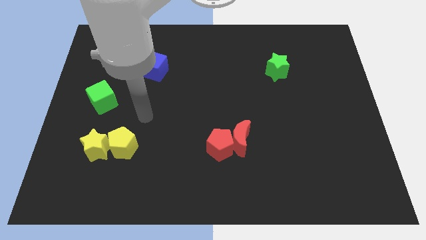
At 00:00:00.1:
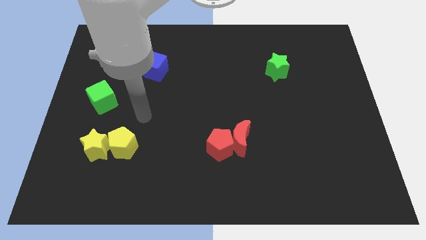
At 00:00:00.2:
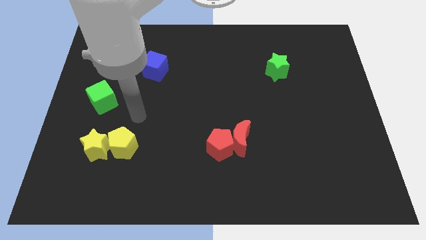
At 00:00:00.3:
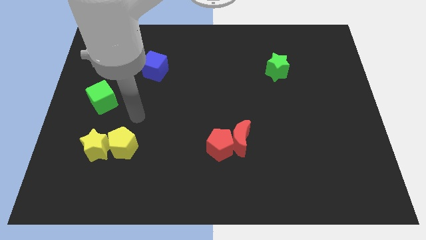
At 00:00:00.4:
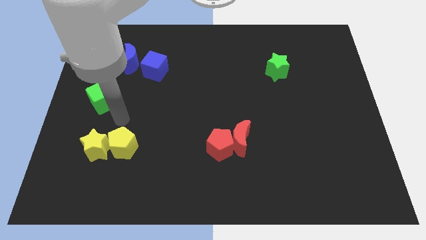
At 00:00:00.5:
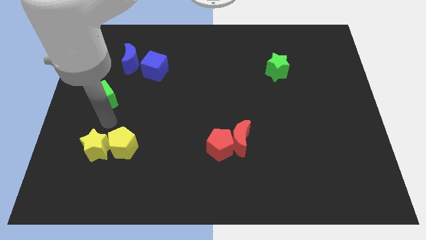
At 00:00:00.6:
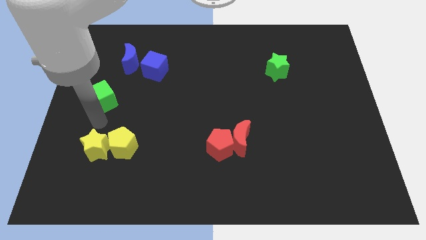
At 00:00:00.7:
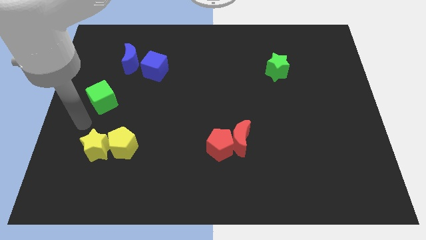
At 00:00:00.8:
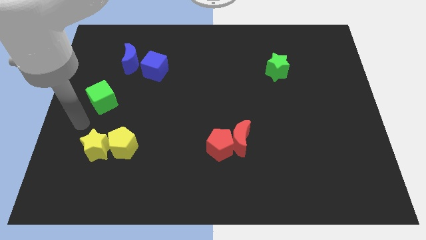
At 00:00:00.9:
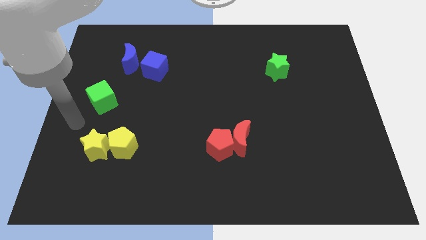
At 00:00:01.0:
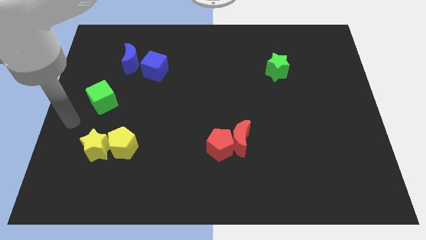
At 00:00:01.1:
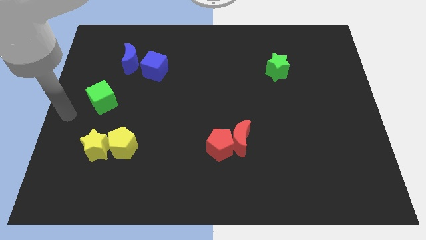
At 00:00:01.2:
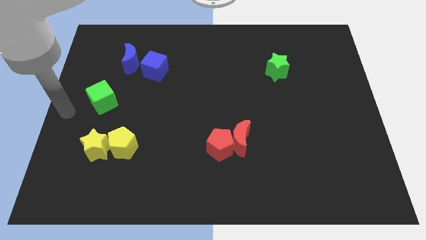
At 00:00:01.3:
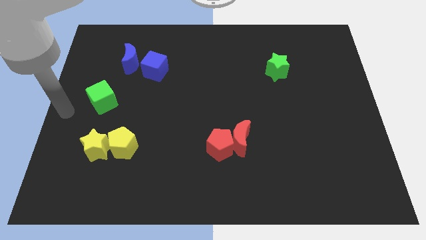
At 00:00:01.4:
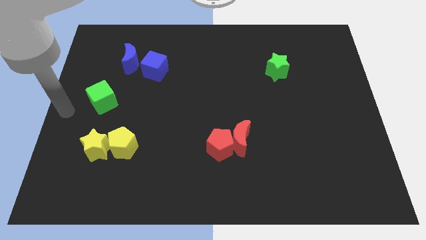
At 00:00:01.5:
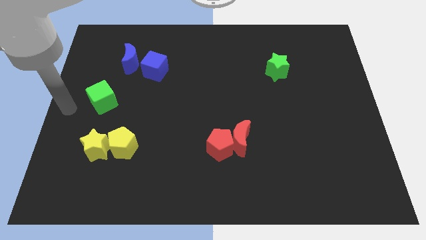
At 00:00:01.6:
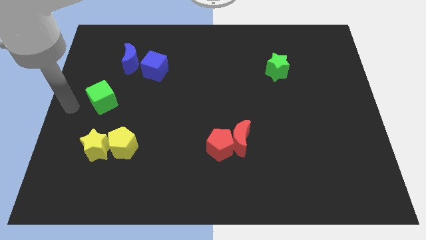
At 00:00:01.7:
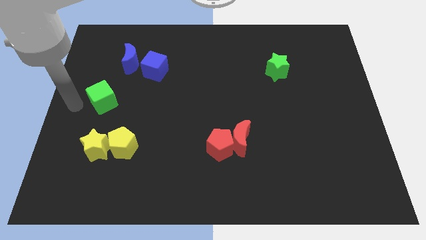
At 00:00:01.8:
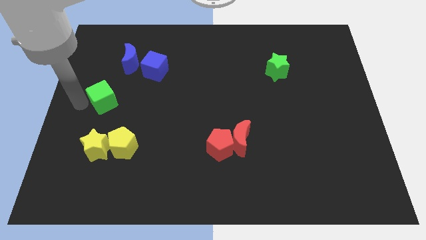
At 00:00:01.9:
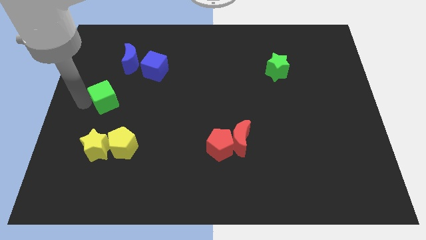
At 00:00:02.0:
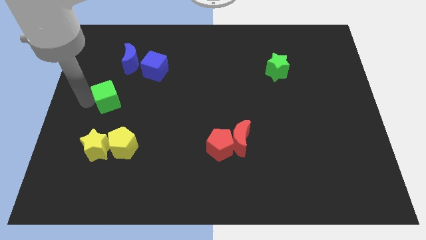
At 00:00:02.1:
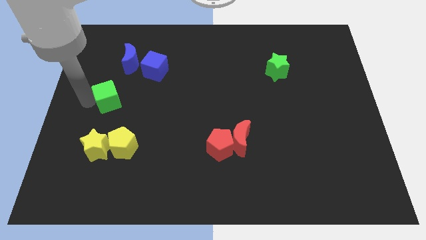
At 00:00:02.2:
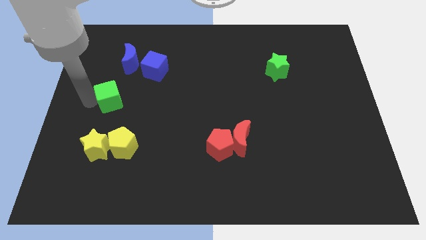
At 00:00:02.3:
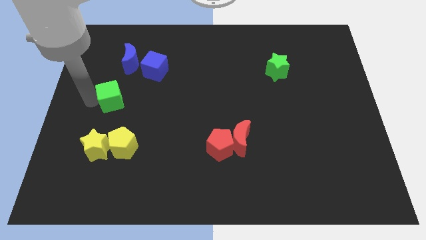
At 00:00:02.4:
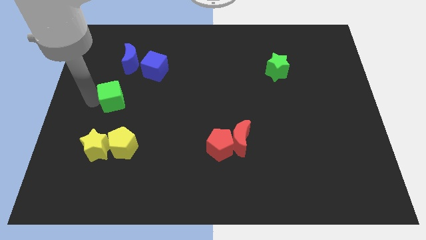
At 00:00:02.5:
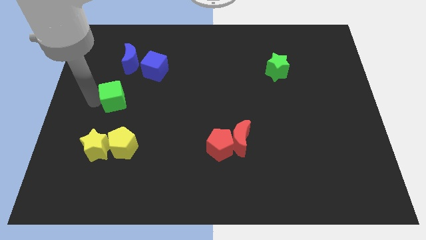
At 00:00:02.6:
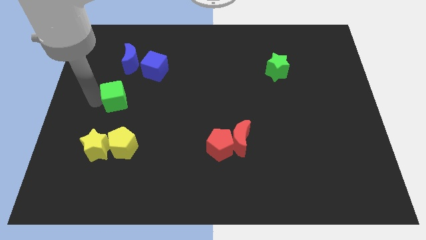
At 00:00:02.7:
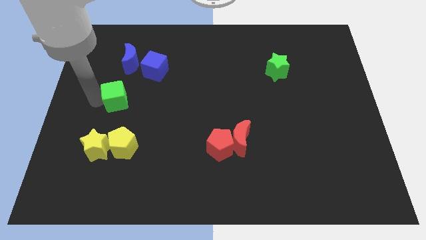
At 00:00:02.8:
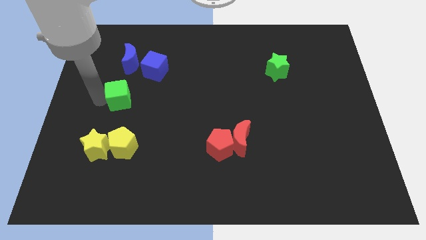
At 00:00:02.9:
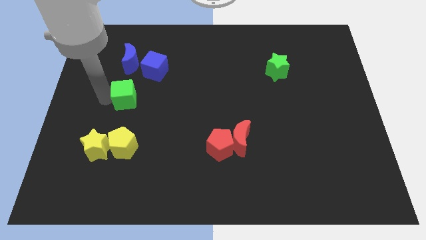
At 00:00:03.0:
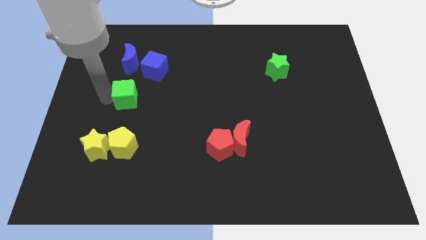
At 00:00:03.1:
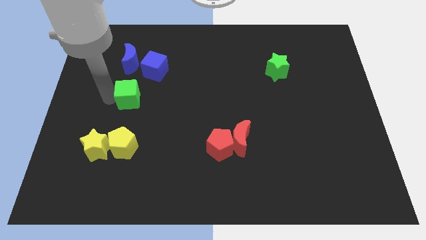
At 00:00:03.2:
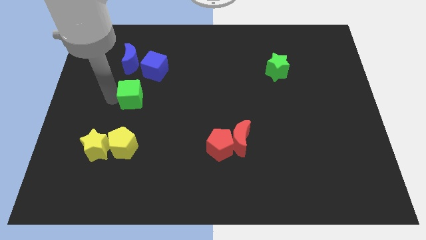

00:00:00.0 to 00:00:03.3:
move the green cube below the blue crescent

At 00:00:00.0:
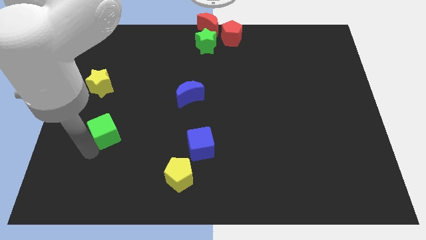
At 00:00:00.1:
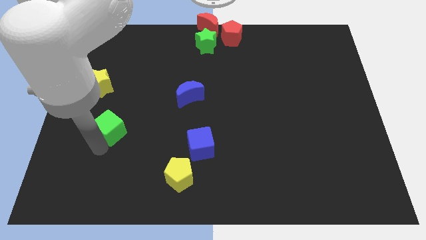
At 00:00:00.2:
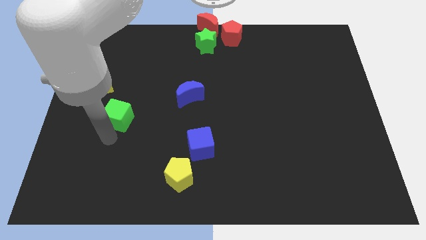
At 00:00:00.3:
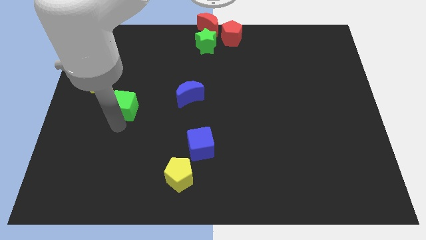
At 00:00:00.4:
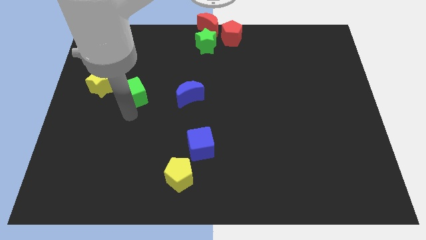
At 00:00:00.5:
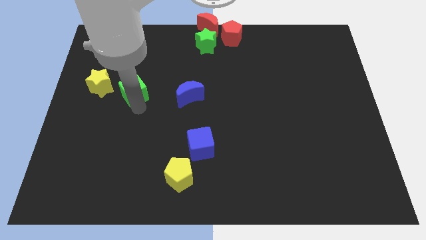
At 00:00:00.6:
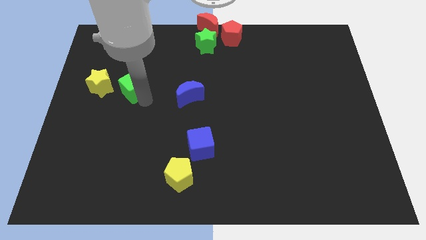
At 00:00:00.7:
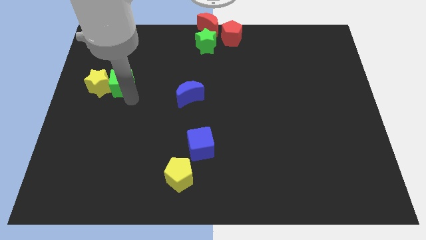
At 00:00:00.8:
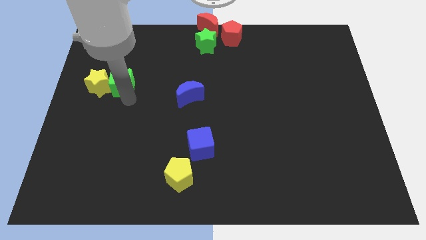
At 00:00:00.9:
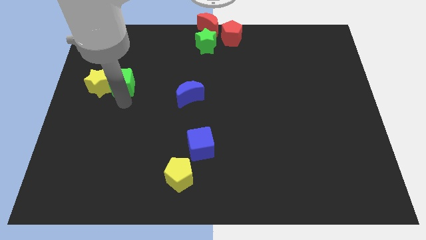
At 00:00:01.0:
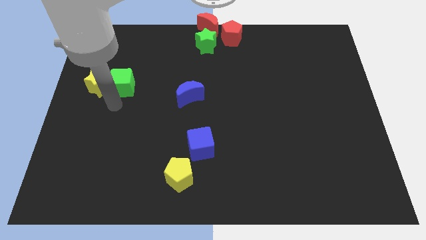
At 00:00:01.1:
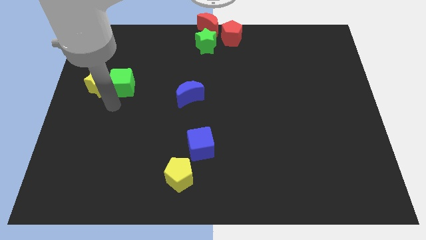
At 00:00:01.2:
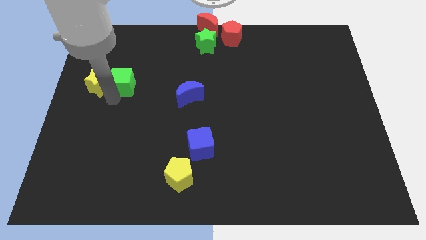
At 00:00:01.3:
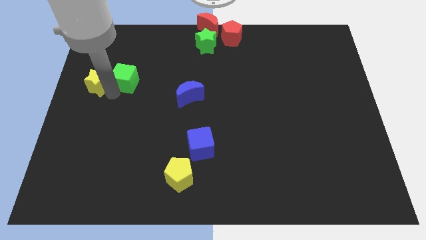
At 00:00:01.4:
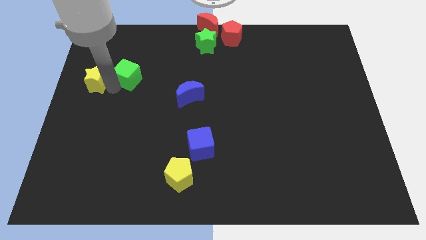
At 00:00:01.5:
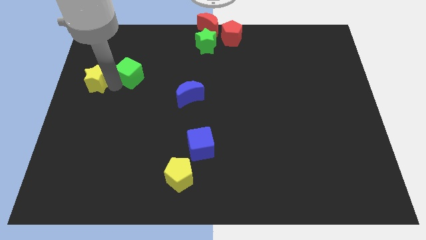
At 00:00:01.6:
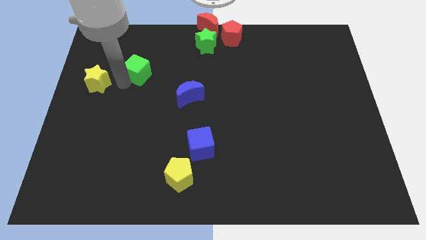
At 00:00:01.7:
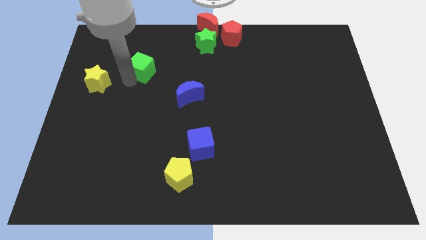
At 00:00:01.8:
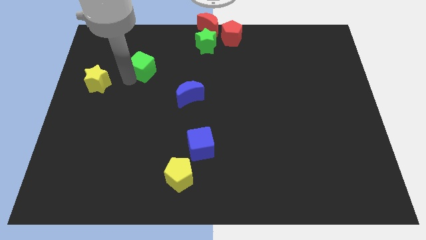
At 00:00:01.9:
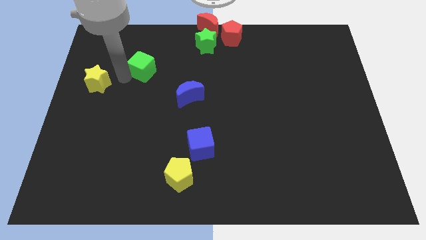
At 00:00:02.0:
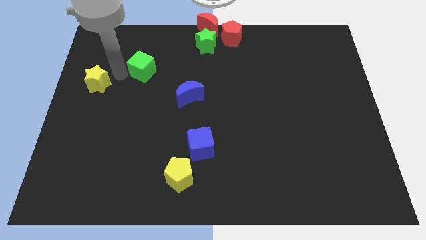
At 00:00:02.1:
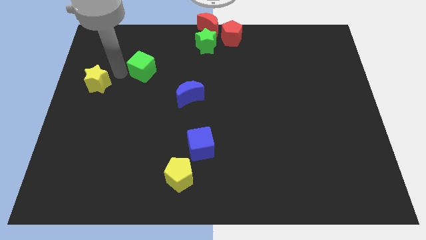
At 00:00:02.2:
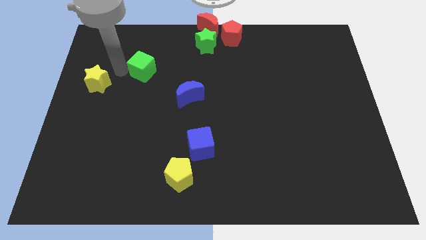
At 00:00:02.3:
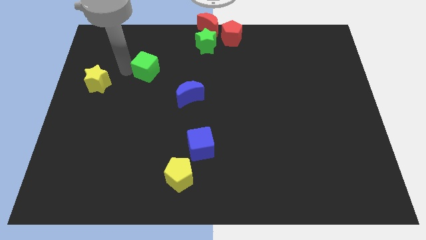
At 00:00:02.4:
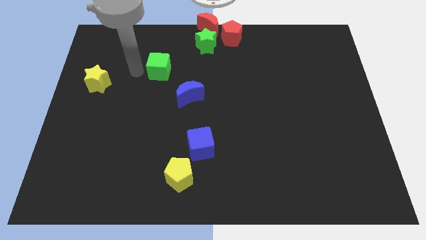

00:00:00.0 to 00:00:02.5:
move the green cube to the right of the yellow star

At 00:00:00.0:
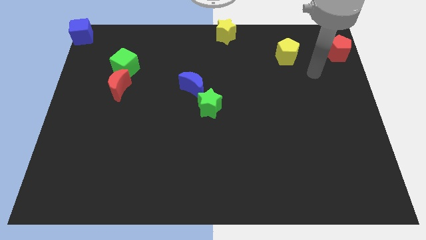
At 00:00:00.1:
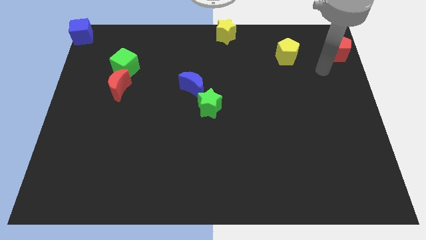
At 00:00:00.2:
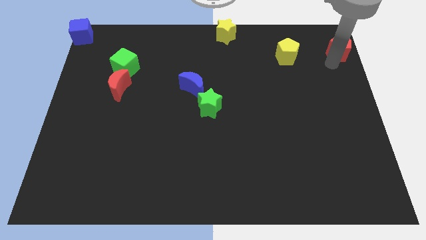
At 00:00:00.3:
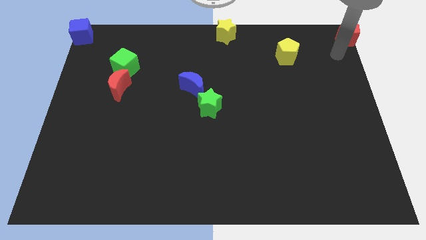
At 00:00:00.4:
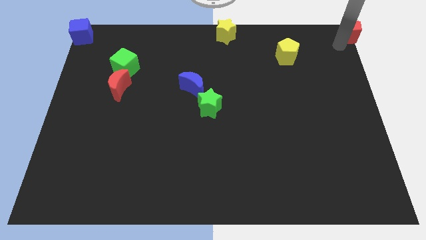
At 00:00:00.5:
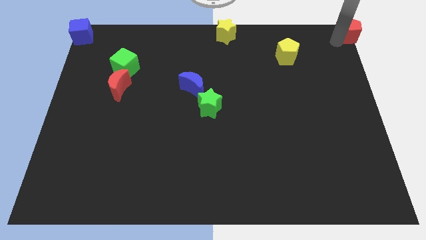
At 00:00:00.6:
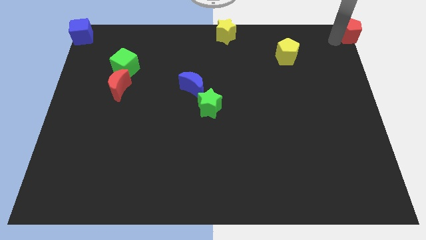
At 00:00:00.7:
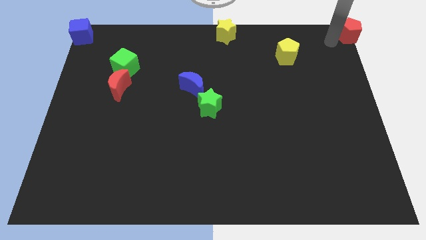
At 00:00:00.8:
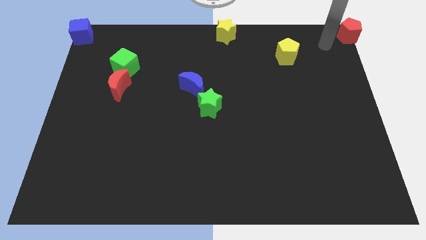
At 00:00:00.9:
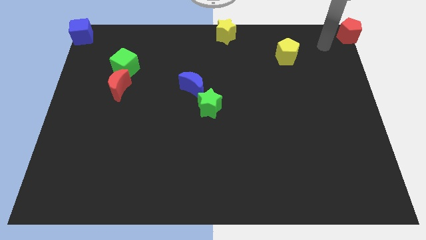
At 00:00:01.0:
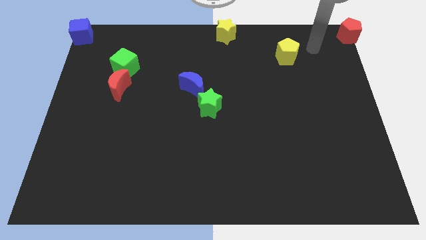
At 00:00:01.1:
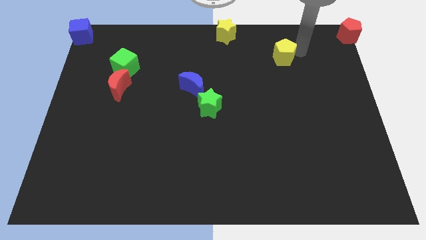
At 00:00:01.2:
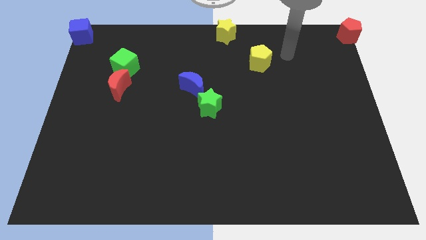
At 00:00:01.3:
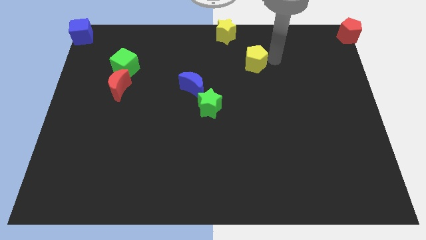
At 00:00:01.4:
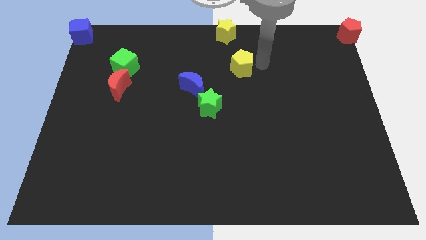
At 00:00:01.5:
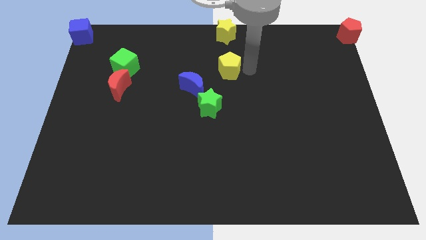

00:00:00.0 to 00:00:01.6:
push yellow pentagon below yellow star

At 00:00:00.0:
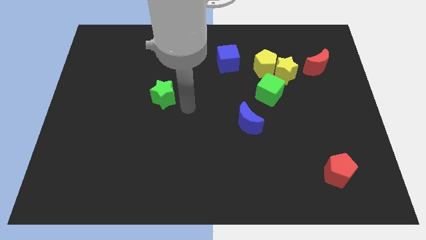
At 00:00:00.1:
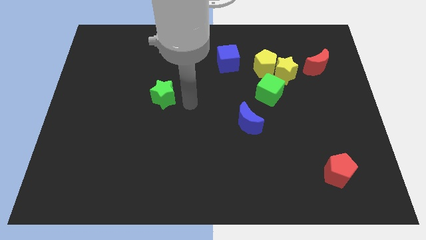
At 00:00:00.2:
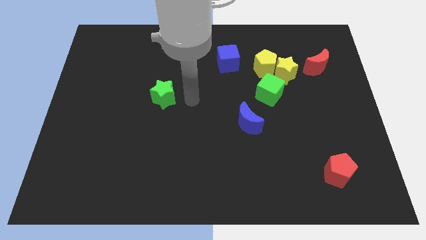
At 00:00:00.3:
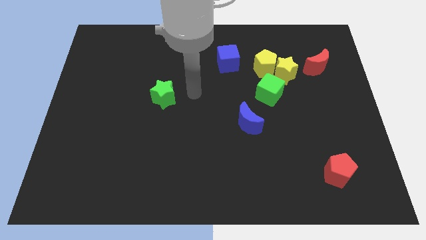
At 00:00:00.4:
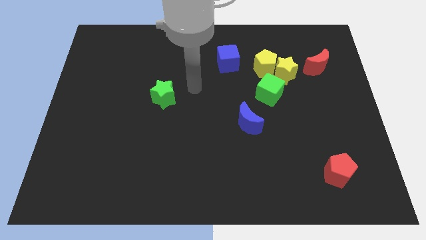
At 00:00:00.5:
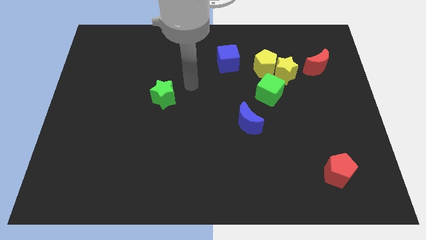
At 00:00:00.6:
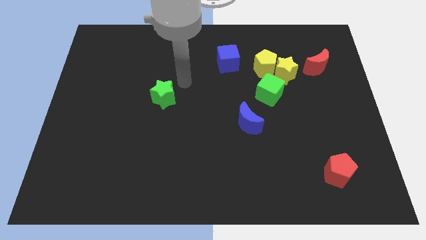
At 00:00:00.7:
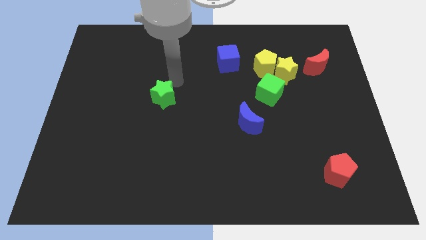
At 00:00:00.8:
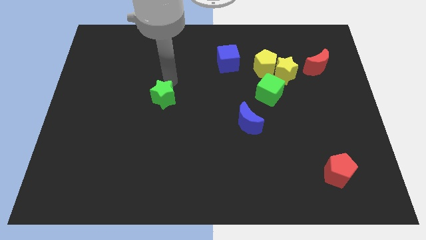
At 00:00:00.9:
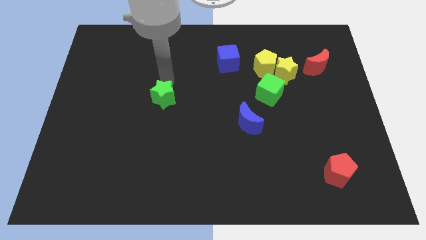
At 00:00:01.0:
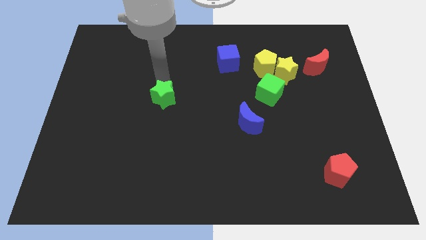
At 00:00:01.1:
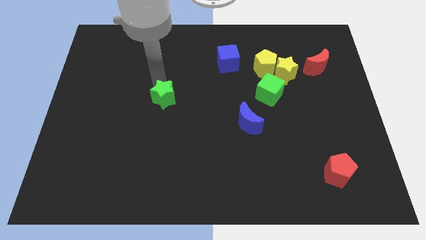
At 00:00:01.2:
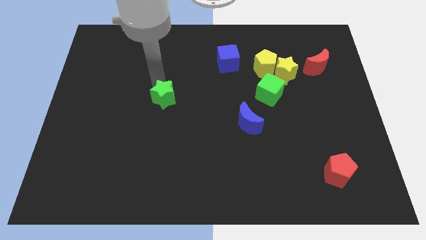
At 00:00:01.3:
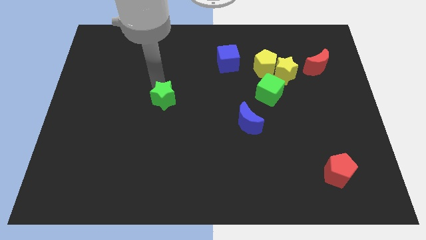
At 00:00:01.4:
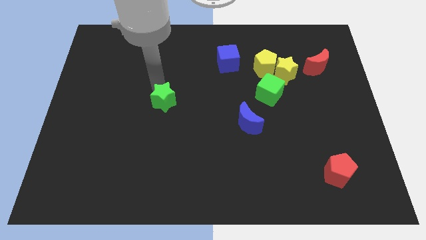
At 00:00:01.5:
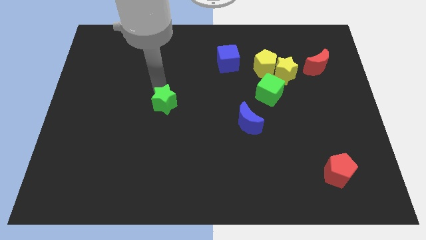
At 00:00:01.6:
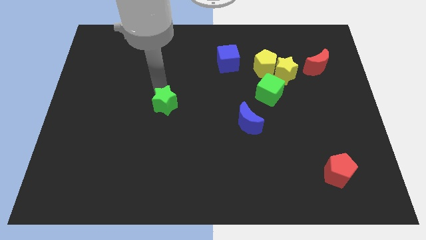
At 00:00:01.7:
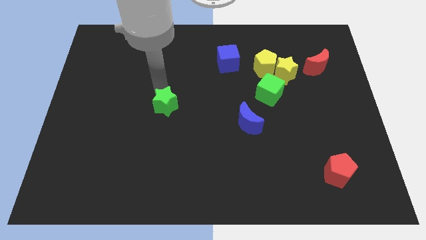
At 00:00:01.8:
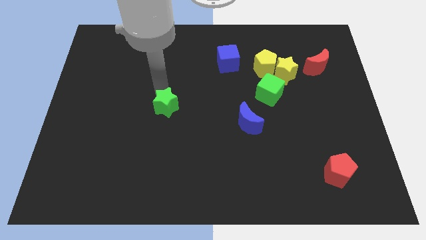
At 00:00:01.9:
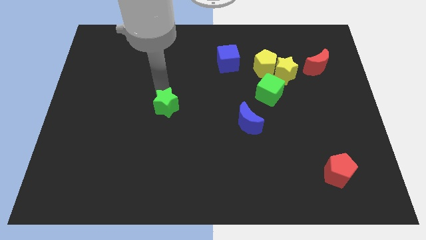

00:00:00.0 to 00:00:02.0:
push the green star slightly to the bottom
